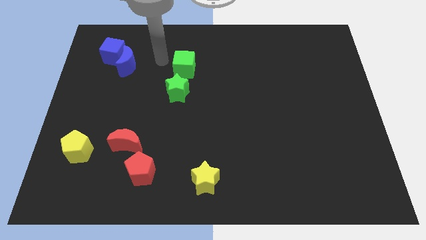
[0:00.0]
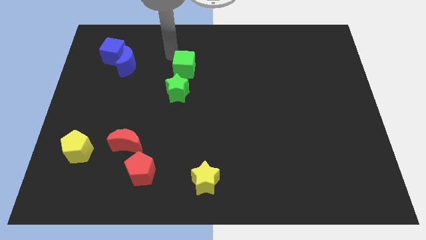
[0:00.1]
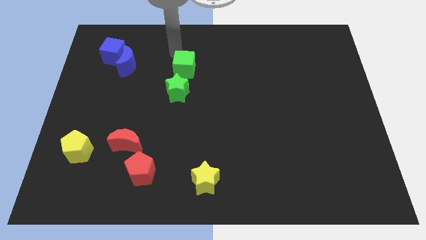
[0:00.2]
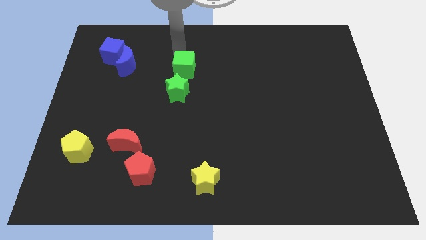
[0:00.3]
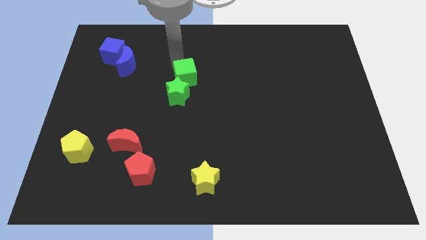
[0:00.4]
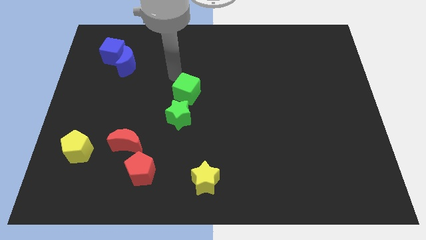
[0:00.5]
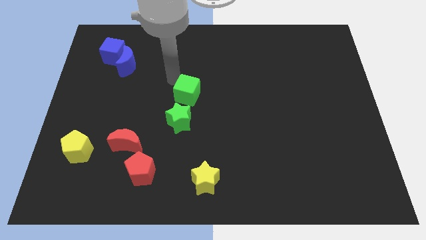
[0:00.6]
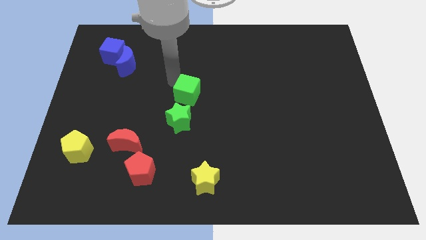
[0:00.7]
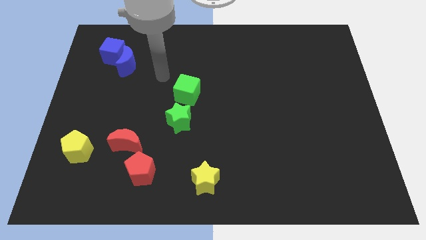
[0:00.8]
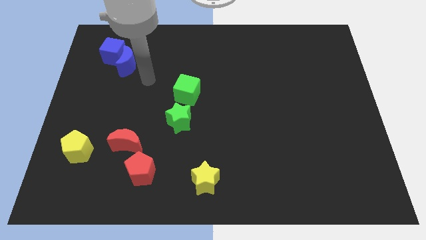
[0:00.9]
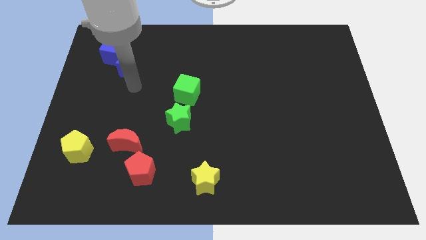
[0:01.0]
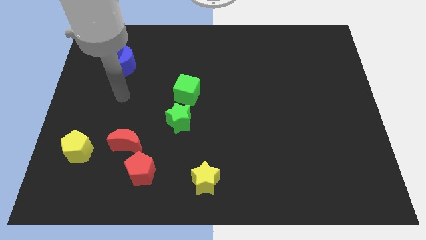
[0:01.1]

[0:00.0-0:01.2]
push the green star with green cube towards the center

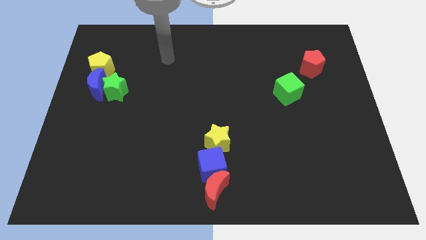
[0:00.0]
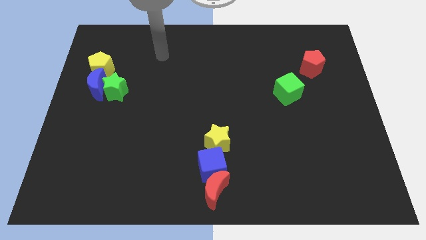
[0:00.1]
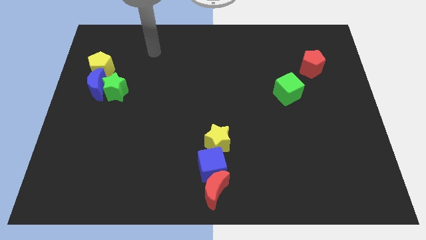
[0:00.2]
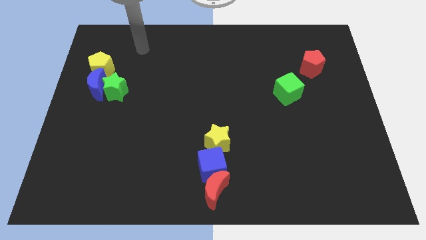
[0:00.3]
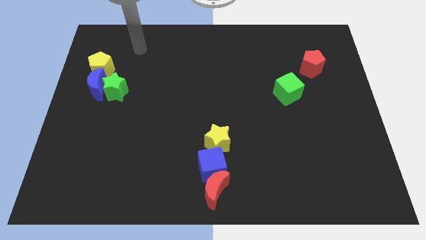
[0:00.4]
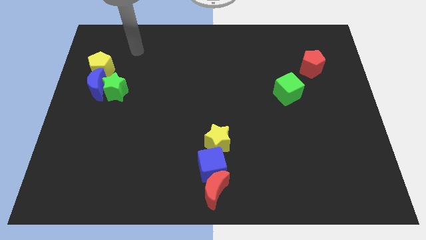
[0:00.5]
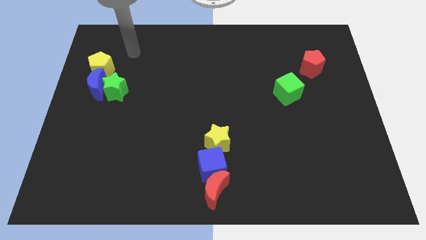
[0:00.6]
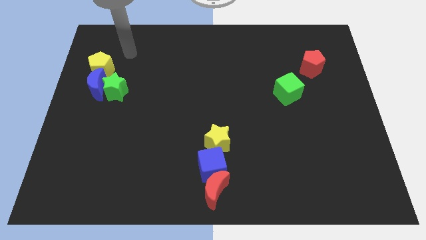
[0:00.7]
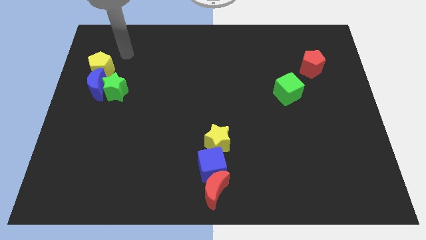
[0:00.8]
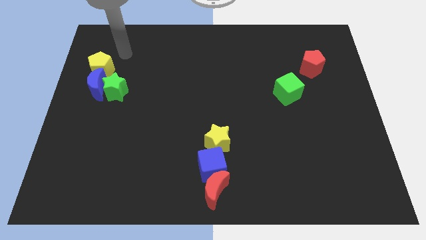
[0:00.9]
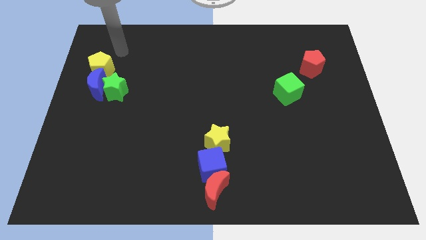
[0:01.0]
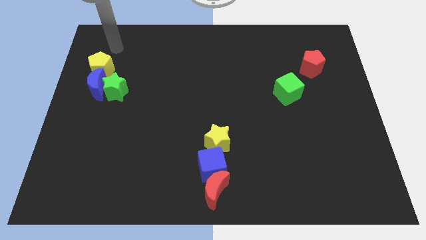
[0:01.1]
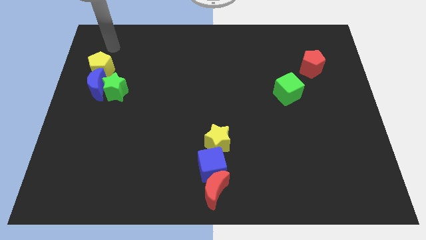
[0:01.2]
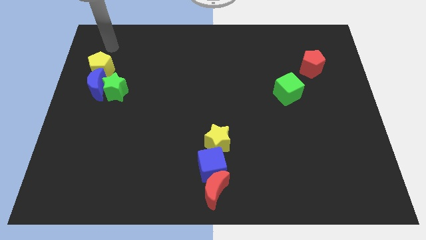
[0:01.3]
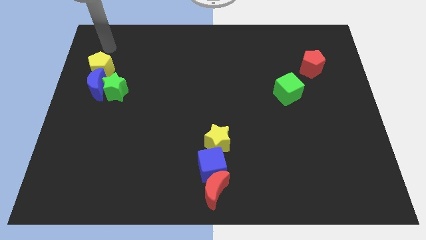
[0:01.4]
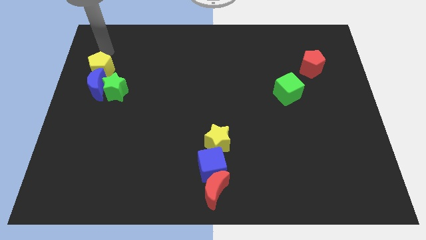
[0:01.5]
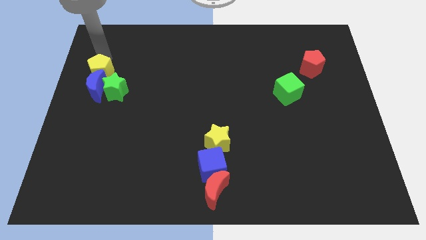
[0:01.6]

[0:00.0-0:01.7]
point your arm at the top of yellow pentagon

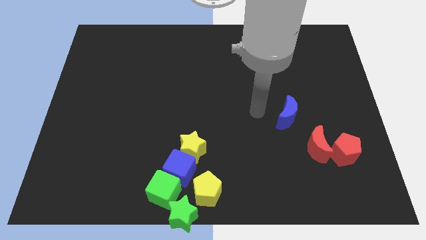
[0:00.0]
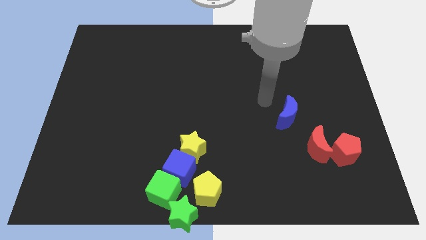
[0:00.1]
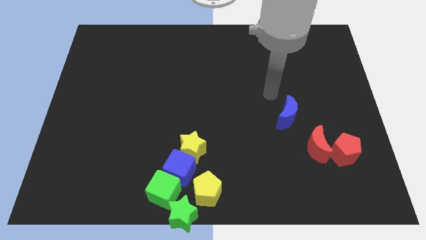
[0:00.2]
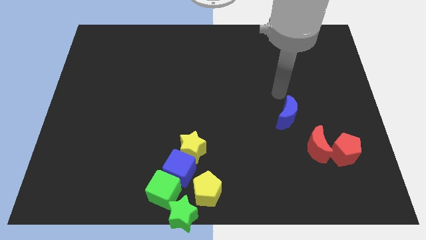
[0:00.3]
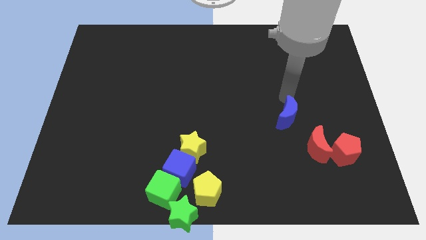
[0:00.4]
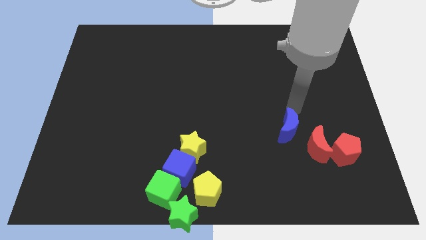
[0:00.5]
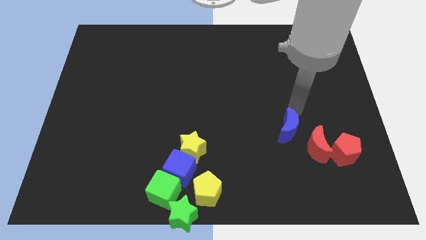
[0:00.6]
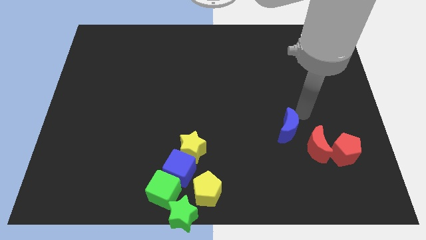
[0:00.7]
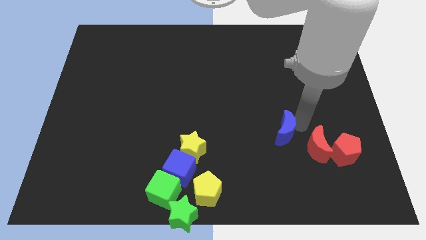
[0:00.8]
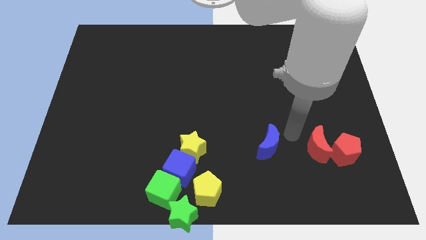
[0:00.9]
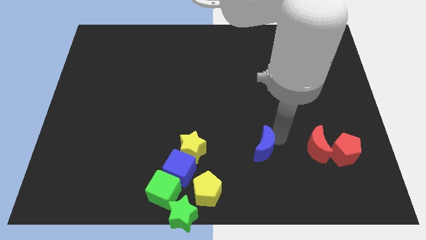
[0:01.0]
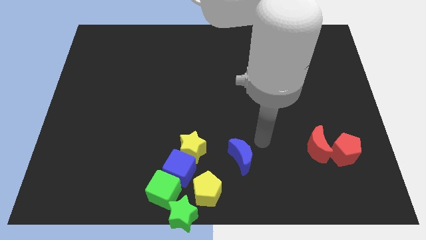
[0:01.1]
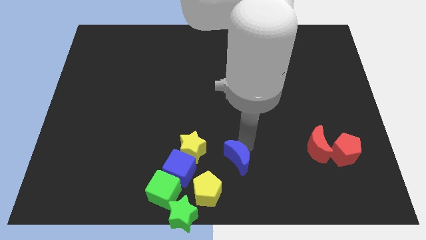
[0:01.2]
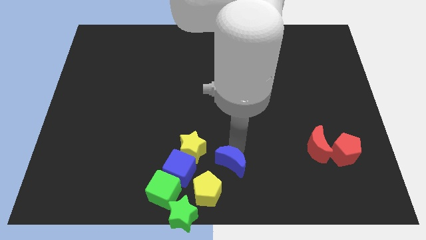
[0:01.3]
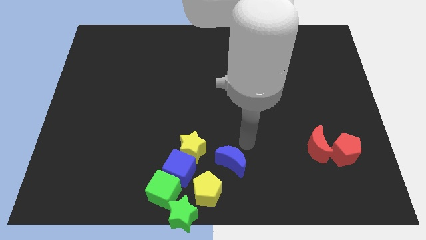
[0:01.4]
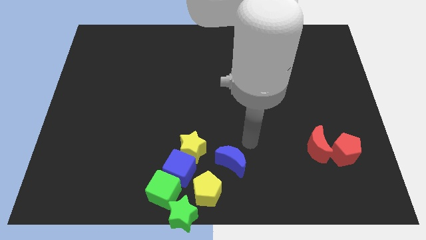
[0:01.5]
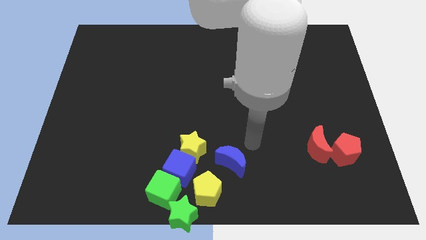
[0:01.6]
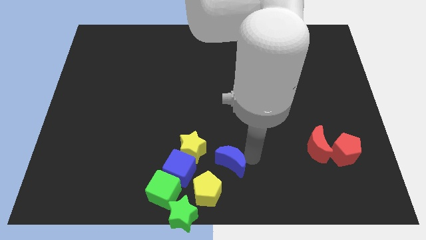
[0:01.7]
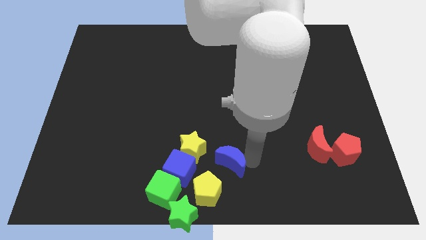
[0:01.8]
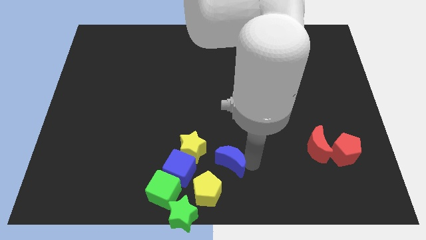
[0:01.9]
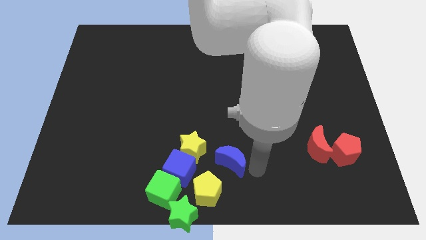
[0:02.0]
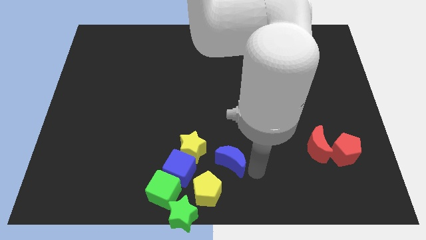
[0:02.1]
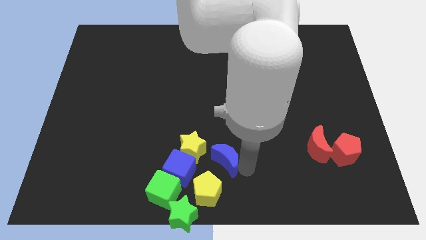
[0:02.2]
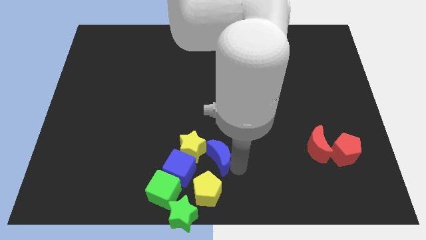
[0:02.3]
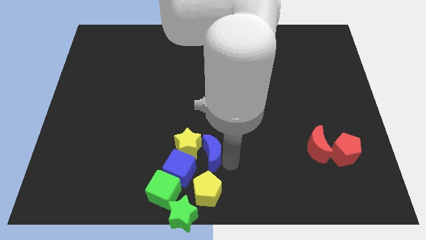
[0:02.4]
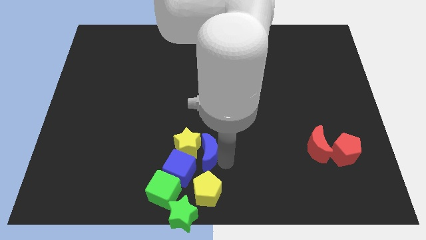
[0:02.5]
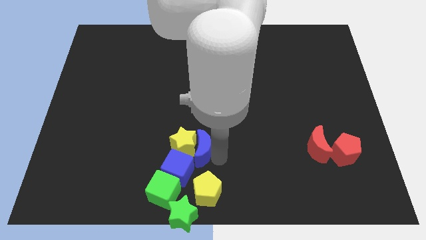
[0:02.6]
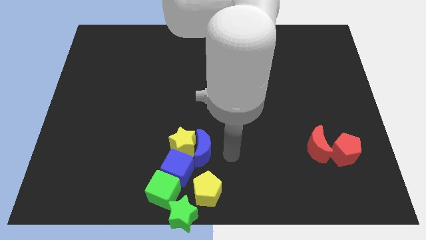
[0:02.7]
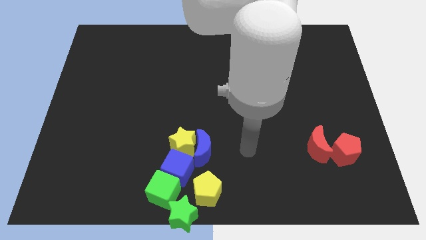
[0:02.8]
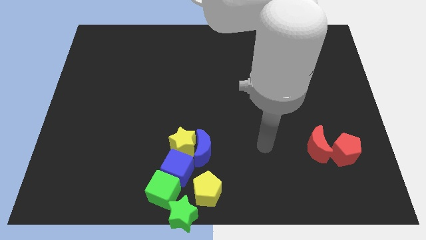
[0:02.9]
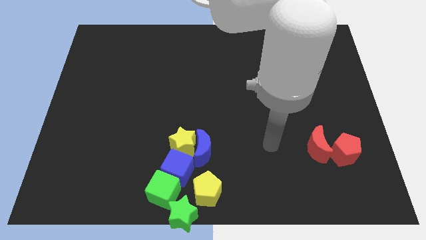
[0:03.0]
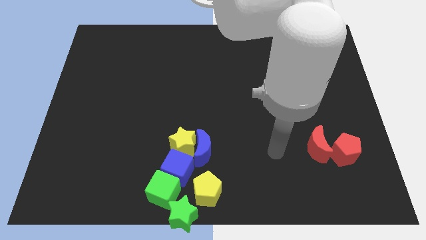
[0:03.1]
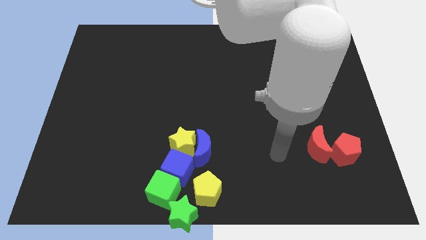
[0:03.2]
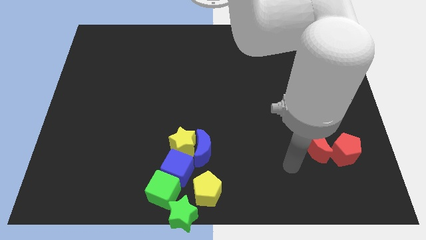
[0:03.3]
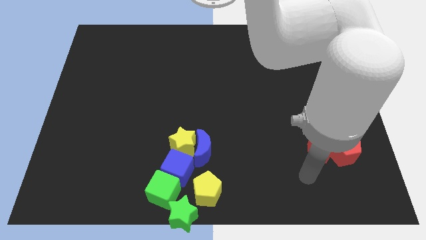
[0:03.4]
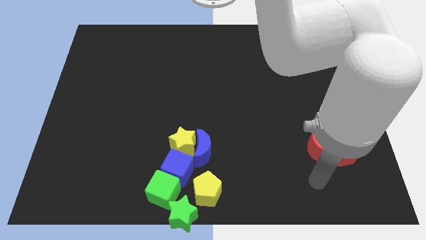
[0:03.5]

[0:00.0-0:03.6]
push the blue crescent into the yellow star

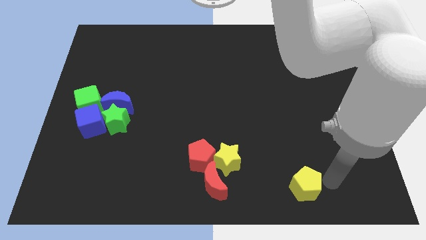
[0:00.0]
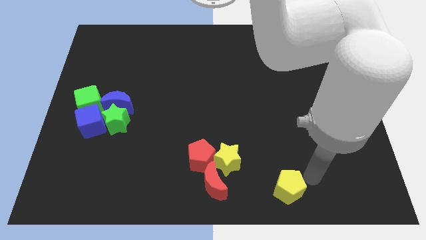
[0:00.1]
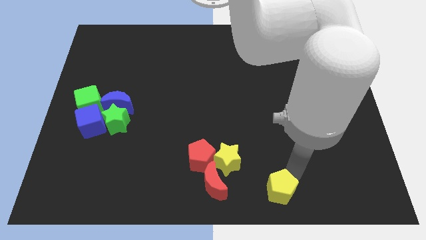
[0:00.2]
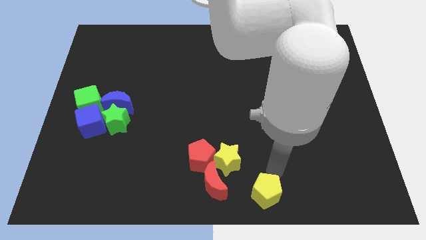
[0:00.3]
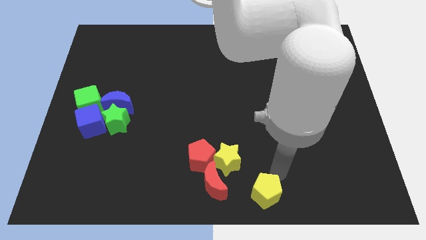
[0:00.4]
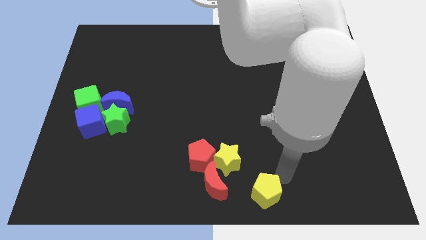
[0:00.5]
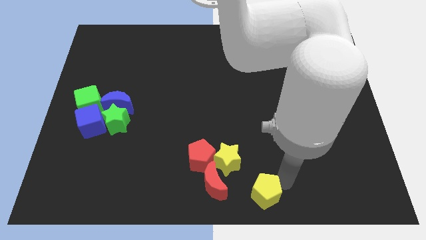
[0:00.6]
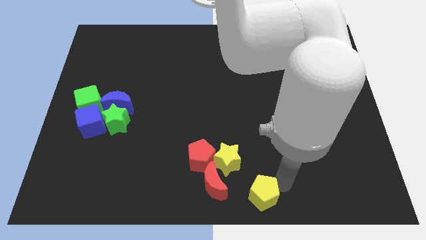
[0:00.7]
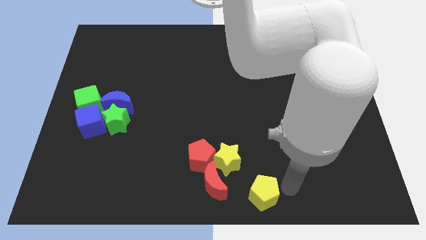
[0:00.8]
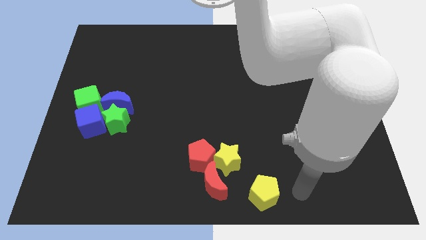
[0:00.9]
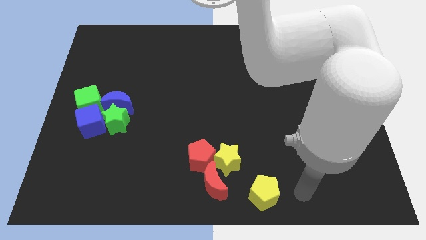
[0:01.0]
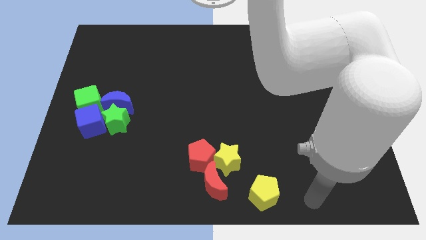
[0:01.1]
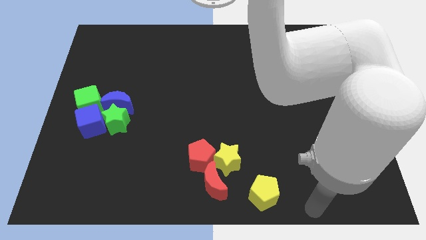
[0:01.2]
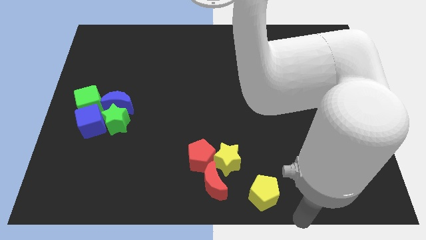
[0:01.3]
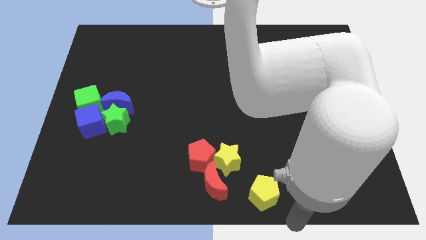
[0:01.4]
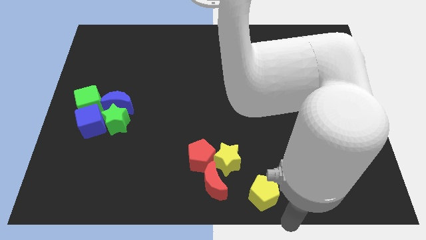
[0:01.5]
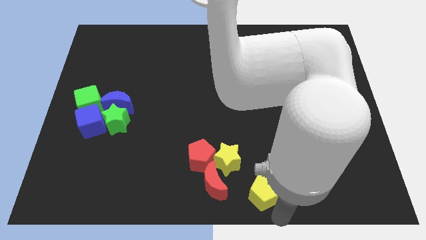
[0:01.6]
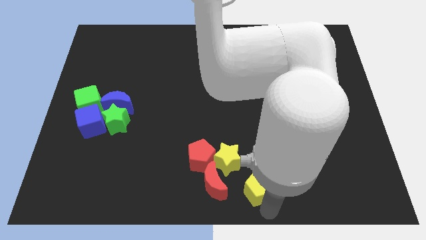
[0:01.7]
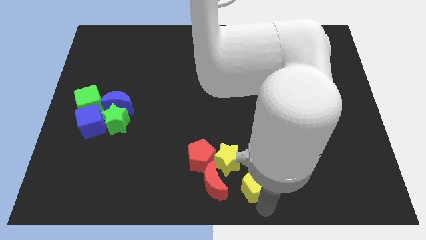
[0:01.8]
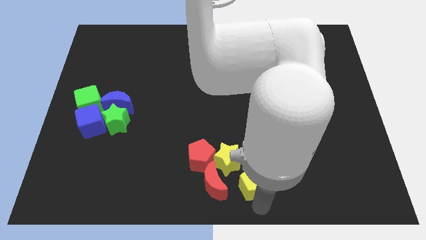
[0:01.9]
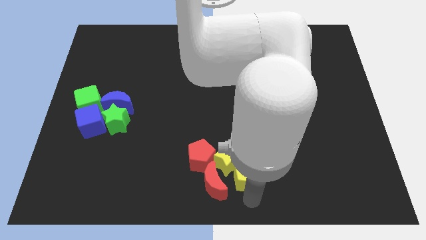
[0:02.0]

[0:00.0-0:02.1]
push the yellow pentagon right to the red crescent

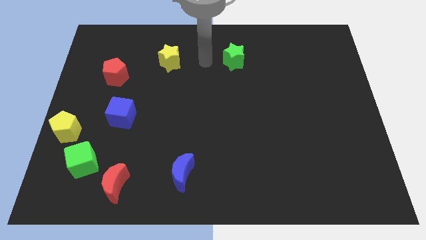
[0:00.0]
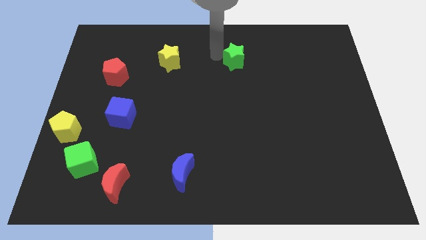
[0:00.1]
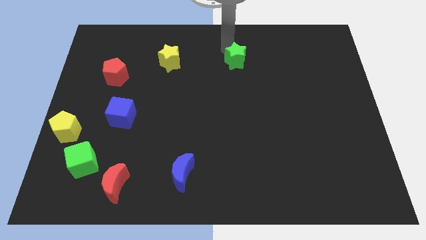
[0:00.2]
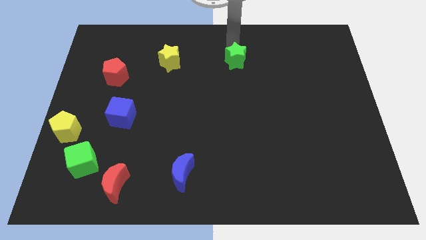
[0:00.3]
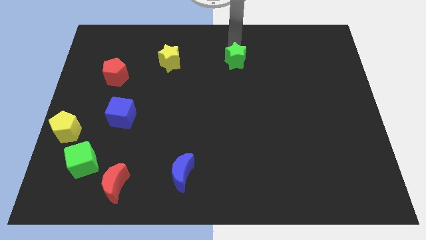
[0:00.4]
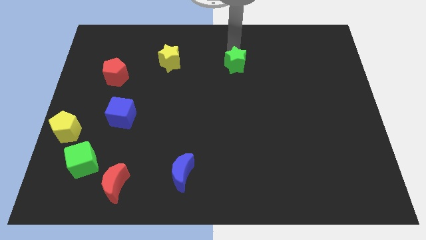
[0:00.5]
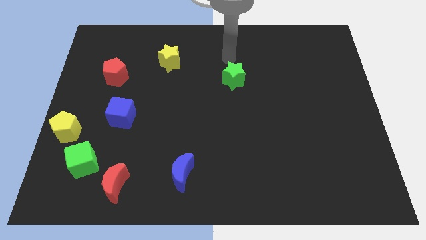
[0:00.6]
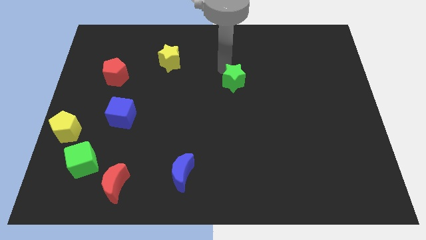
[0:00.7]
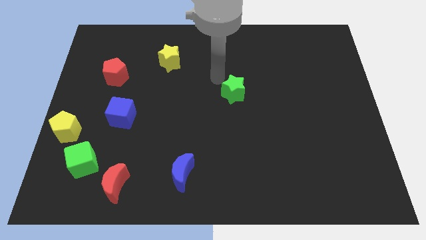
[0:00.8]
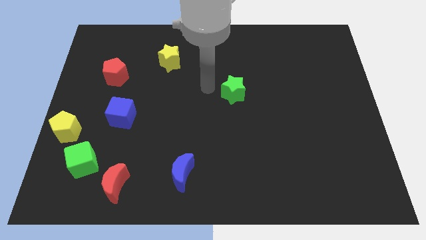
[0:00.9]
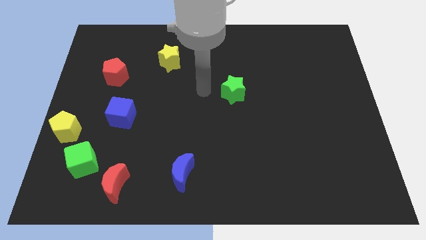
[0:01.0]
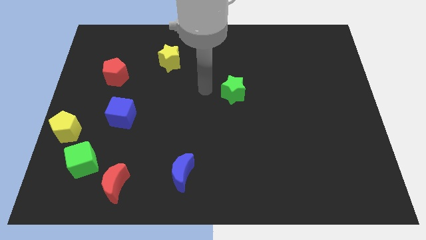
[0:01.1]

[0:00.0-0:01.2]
push the green star slightly to the bottom
